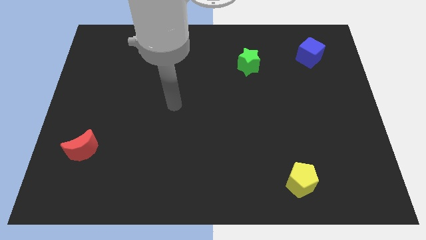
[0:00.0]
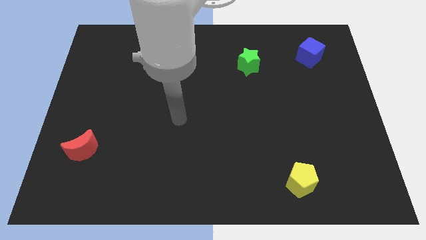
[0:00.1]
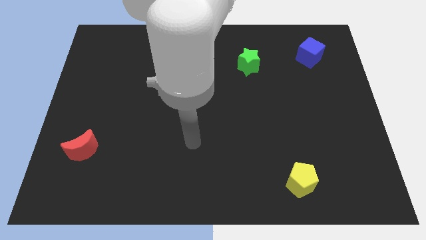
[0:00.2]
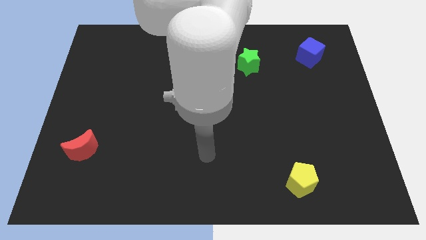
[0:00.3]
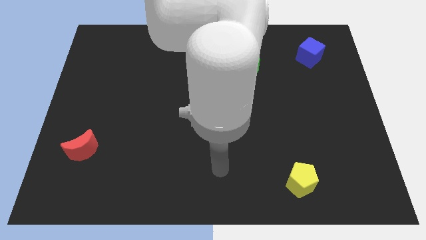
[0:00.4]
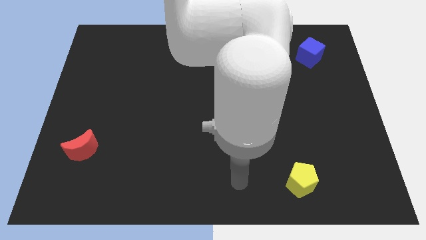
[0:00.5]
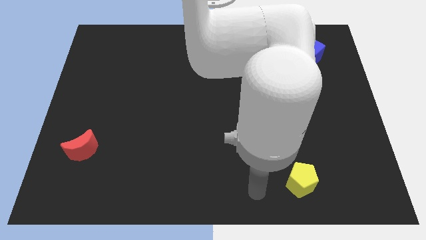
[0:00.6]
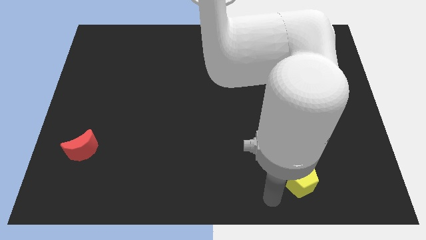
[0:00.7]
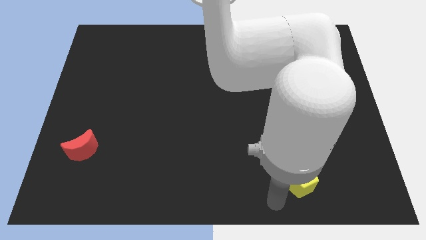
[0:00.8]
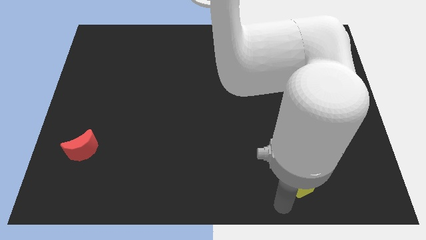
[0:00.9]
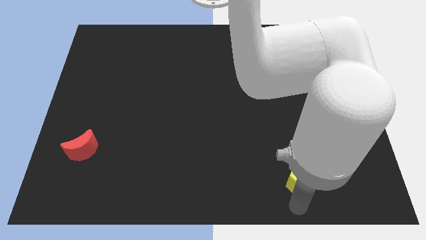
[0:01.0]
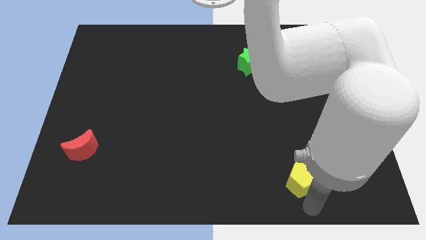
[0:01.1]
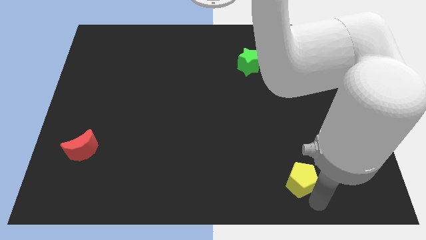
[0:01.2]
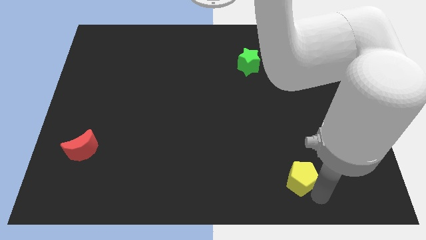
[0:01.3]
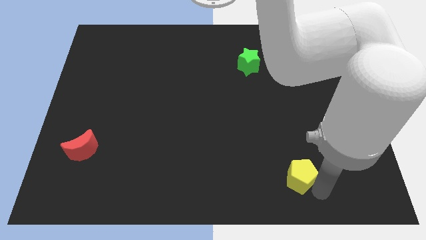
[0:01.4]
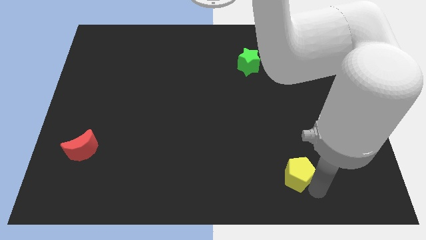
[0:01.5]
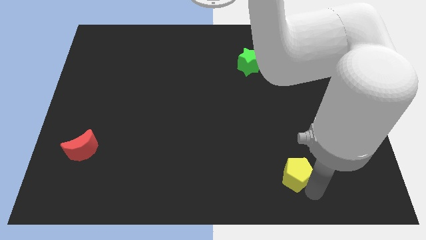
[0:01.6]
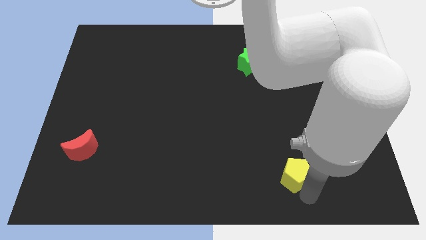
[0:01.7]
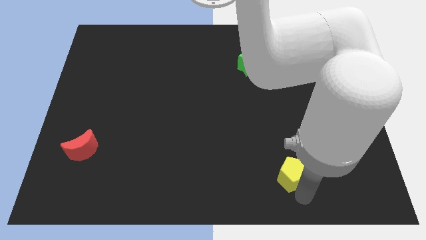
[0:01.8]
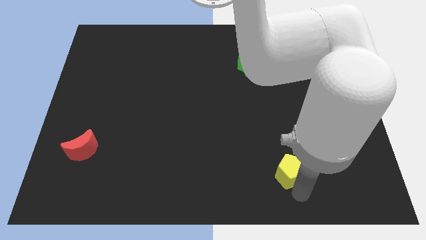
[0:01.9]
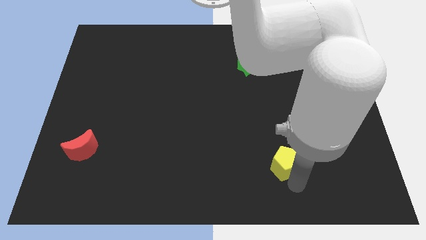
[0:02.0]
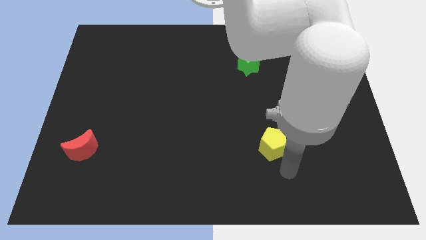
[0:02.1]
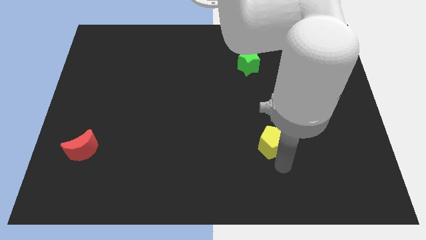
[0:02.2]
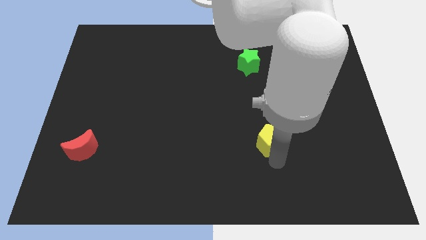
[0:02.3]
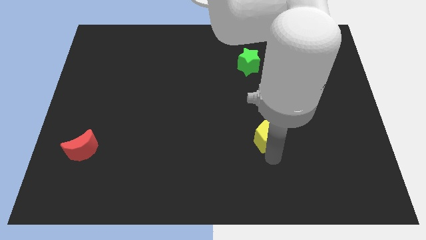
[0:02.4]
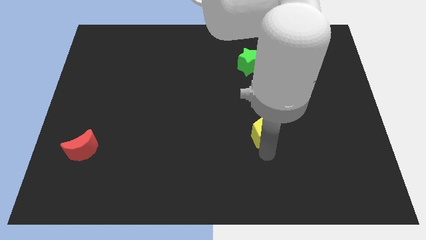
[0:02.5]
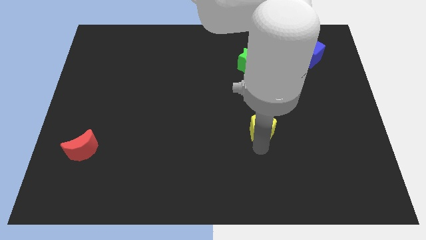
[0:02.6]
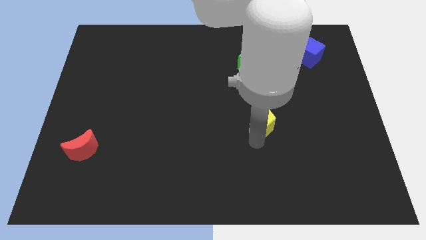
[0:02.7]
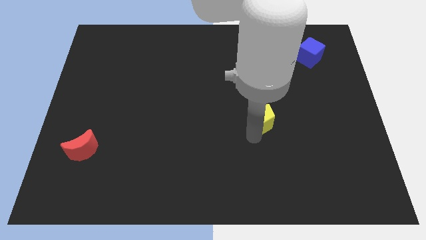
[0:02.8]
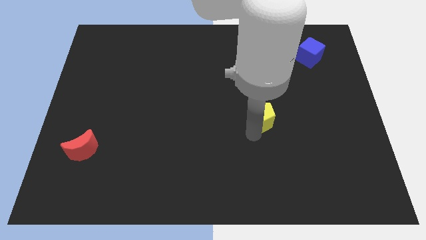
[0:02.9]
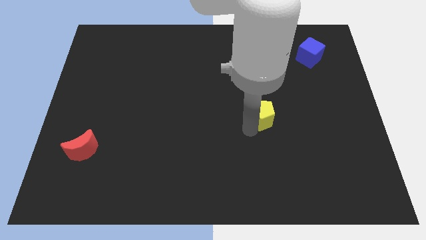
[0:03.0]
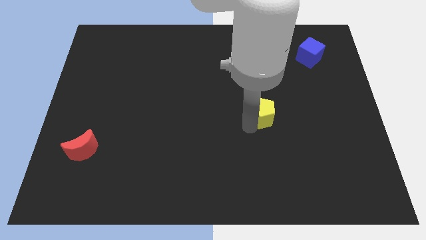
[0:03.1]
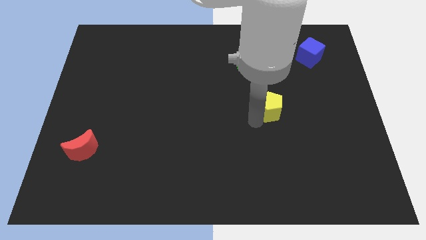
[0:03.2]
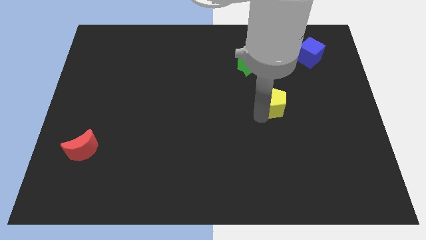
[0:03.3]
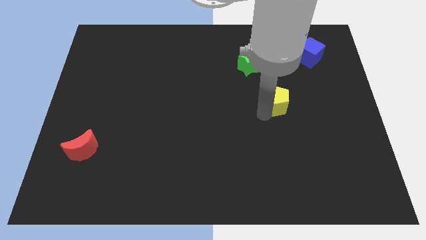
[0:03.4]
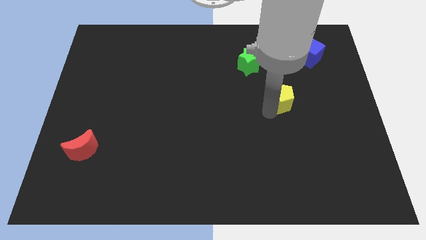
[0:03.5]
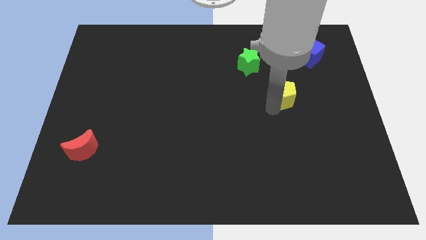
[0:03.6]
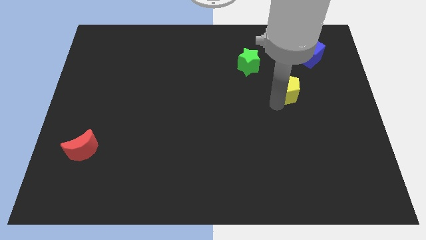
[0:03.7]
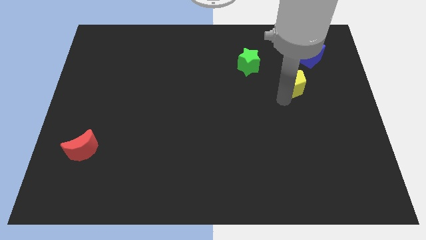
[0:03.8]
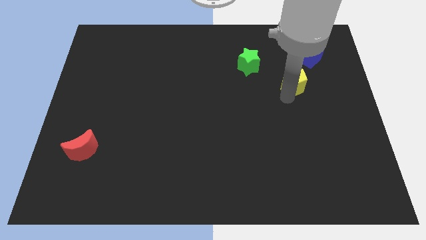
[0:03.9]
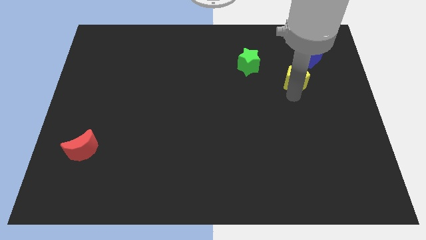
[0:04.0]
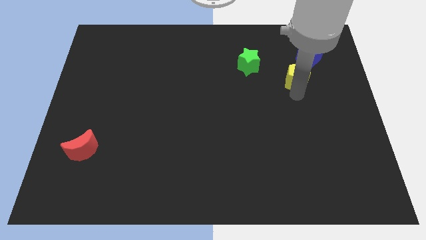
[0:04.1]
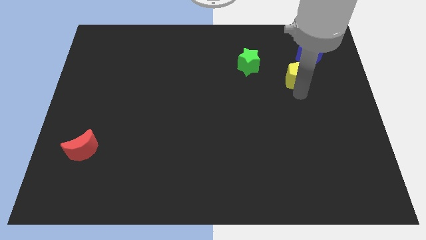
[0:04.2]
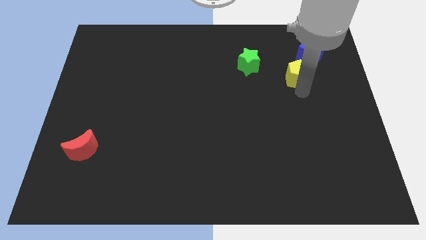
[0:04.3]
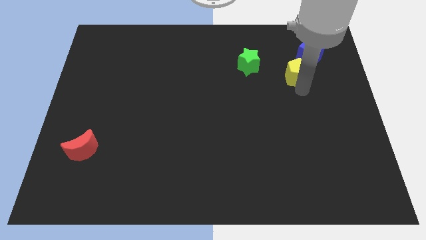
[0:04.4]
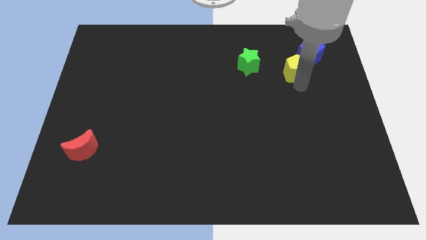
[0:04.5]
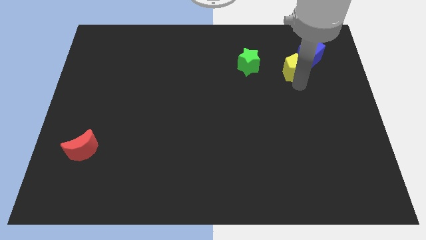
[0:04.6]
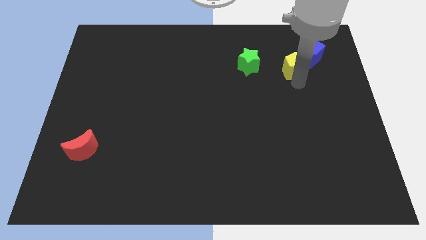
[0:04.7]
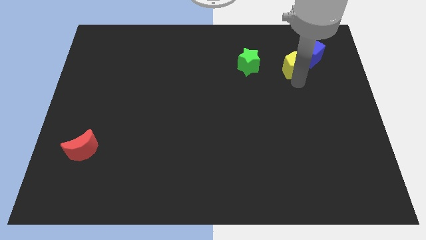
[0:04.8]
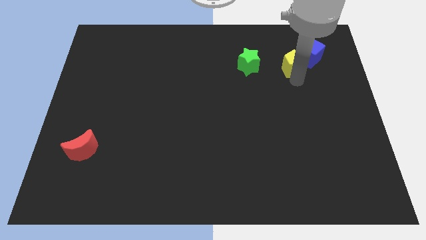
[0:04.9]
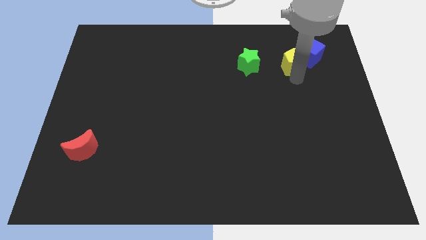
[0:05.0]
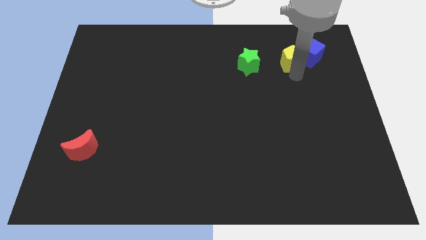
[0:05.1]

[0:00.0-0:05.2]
slide the yellow pentagon close to the cube

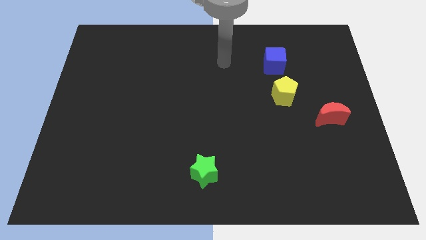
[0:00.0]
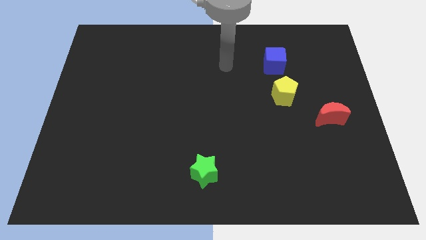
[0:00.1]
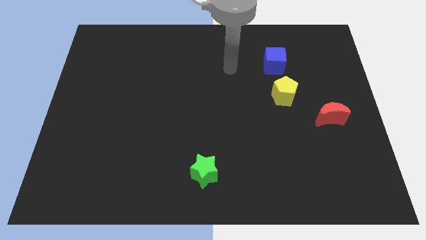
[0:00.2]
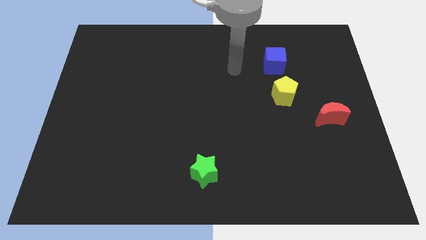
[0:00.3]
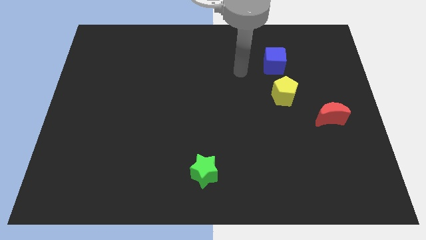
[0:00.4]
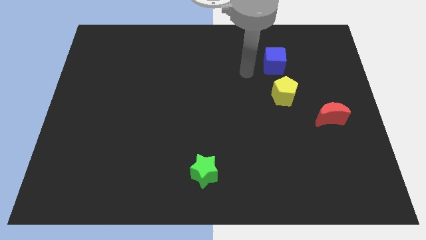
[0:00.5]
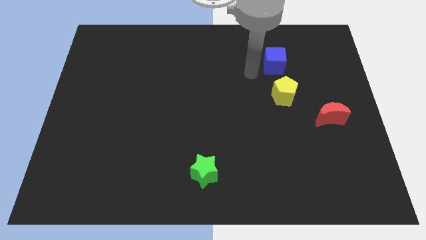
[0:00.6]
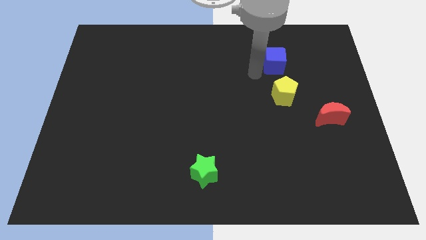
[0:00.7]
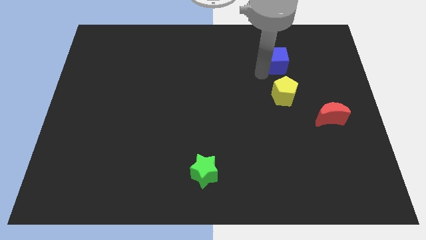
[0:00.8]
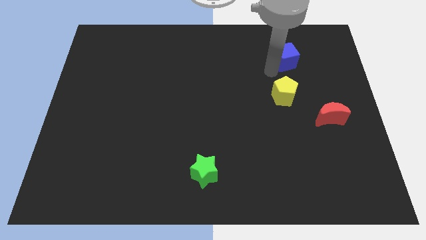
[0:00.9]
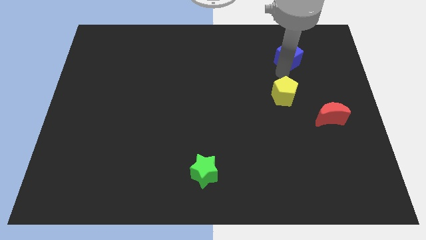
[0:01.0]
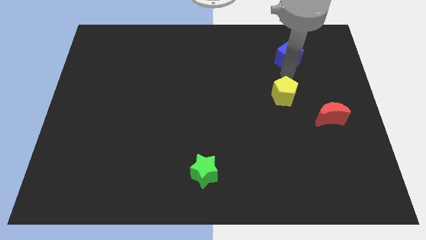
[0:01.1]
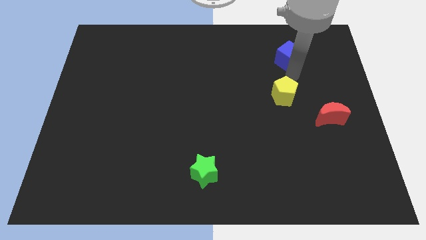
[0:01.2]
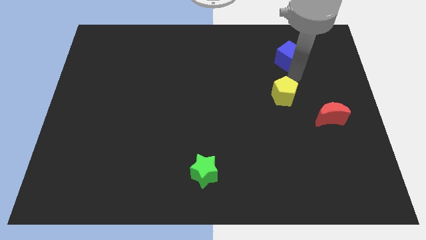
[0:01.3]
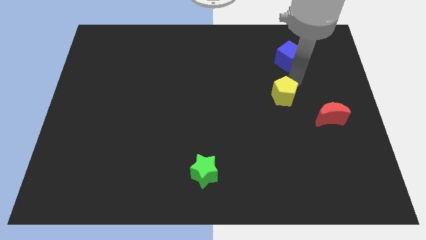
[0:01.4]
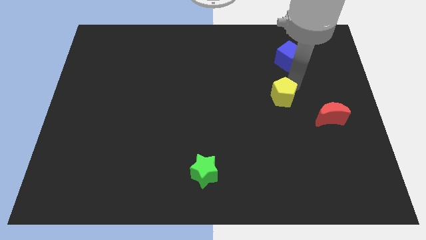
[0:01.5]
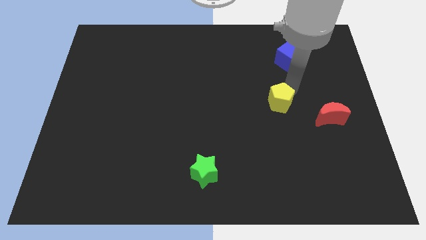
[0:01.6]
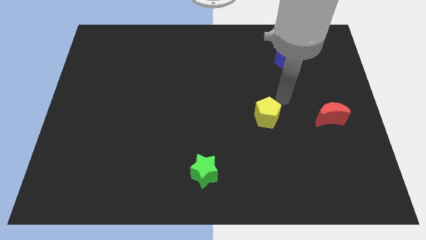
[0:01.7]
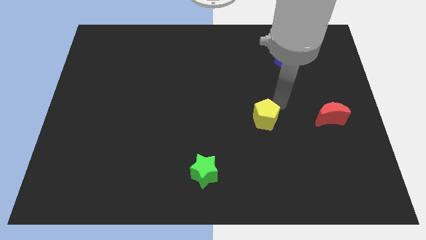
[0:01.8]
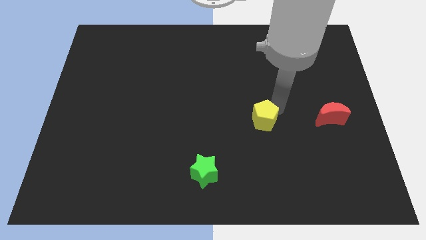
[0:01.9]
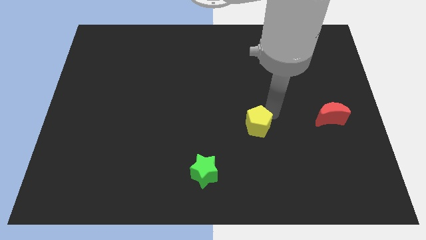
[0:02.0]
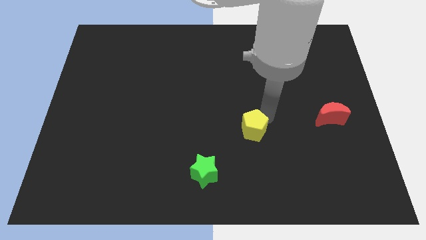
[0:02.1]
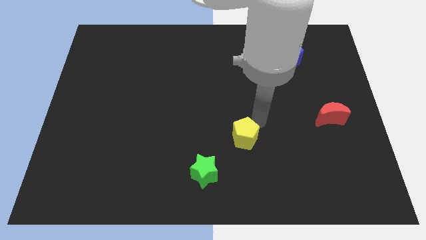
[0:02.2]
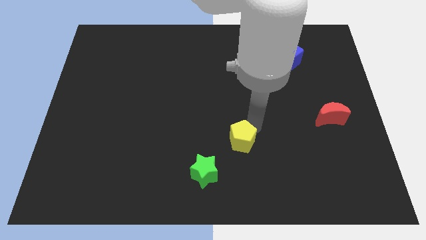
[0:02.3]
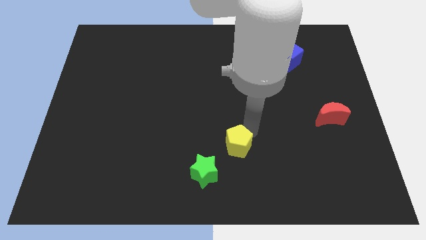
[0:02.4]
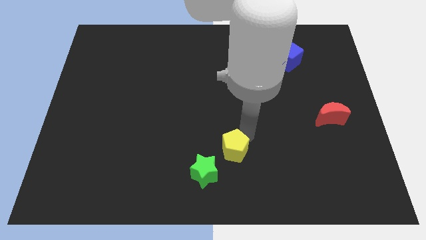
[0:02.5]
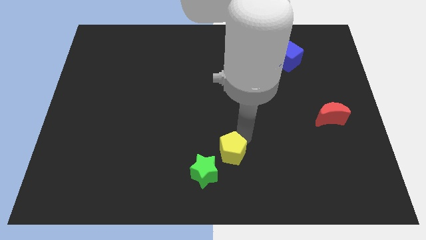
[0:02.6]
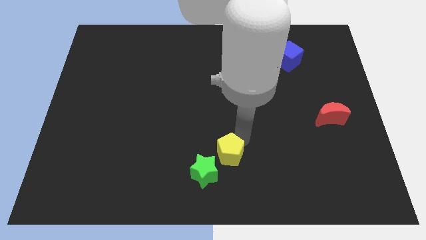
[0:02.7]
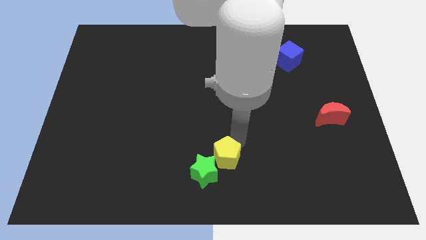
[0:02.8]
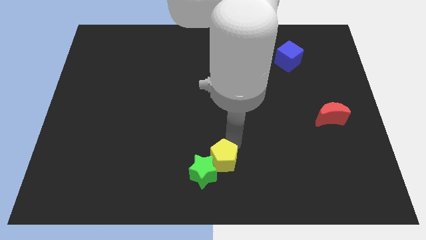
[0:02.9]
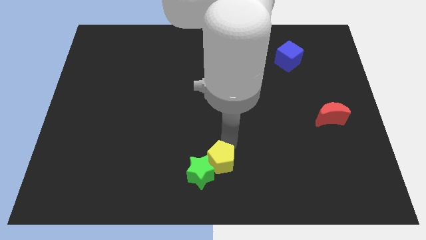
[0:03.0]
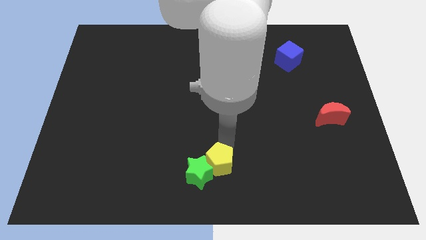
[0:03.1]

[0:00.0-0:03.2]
move the pentagon close to the green star

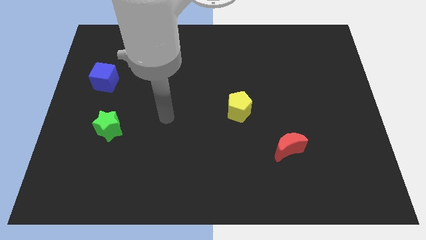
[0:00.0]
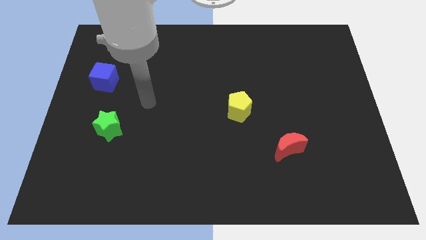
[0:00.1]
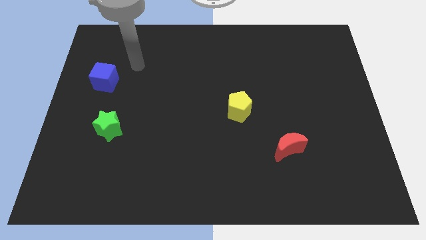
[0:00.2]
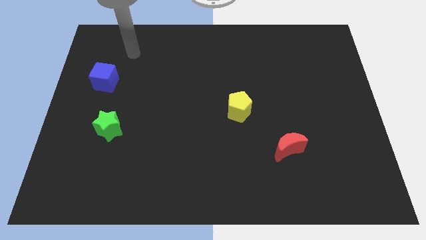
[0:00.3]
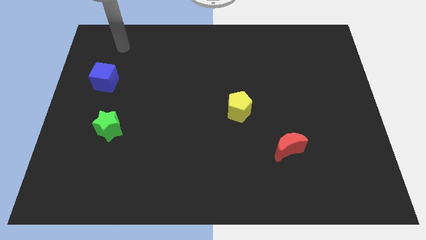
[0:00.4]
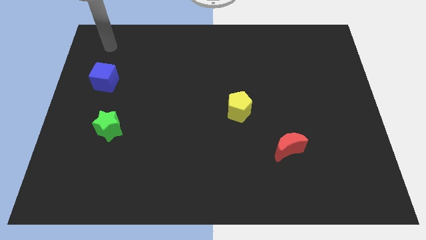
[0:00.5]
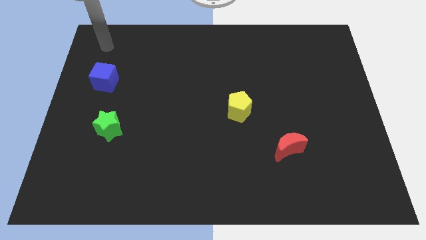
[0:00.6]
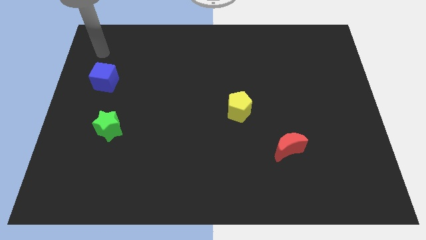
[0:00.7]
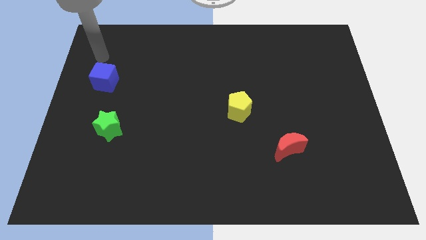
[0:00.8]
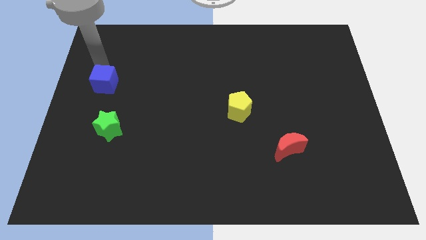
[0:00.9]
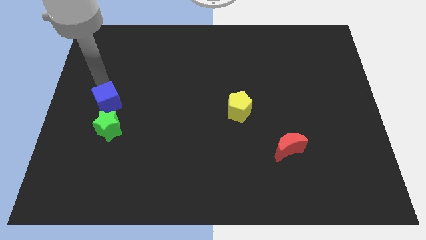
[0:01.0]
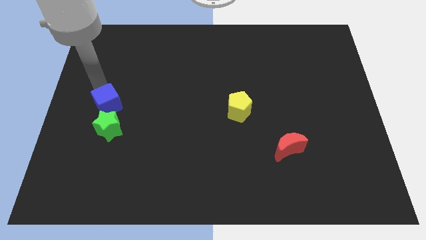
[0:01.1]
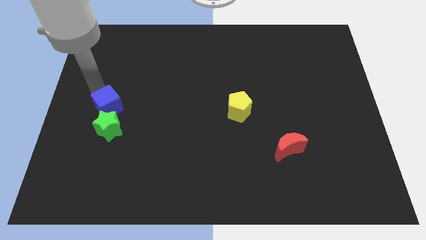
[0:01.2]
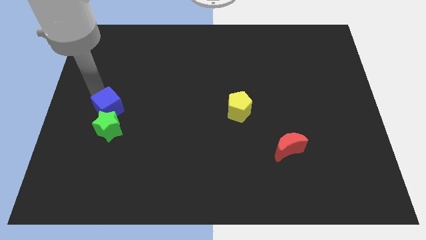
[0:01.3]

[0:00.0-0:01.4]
move the blue cube close to the star
